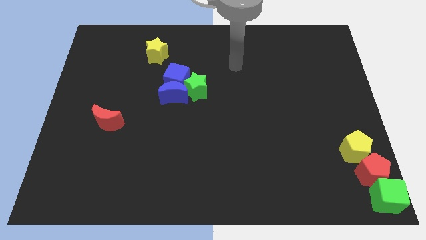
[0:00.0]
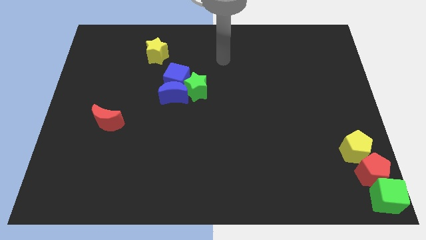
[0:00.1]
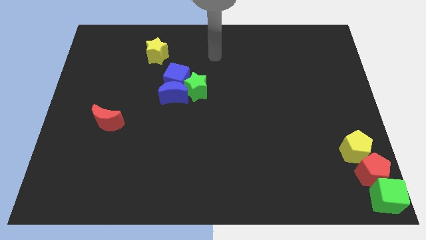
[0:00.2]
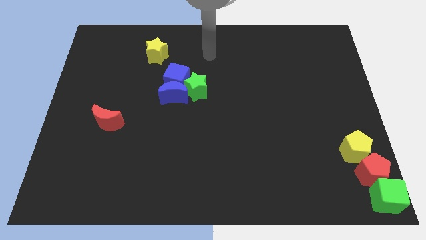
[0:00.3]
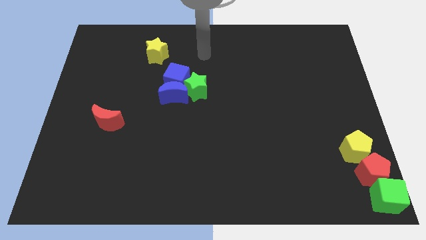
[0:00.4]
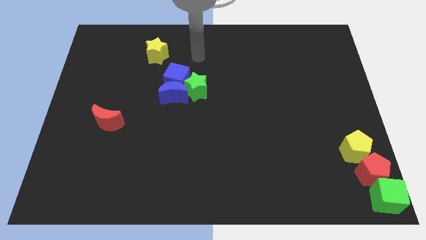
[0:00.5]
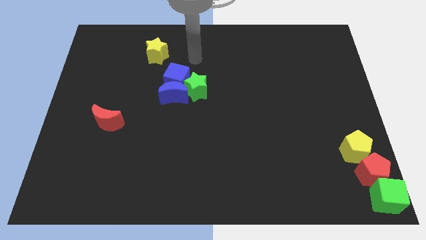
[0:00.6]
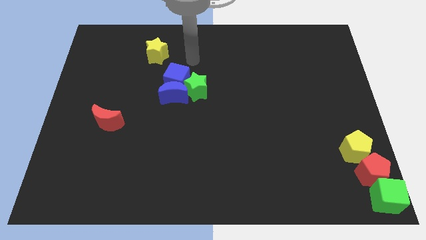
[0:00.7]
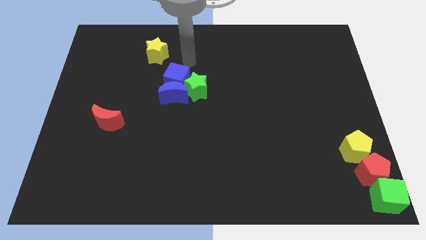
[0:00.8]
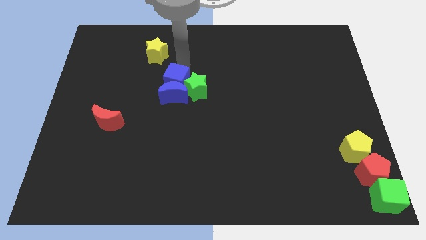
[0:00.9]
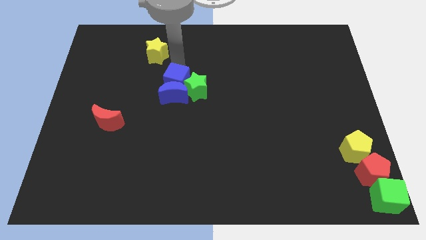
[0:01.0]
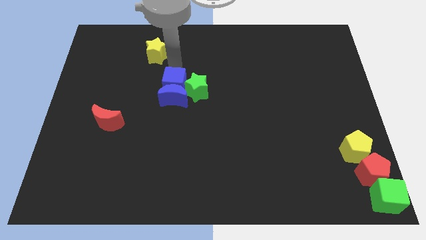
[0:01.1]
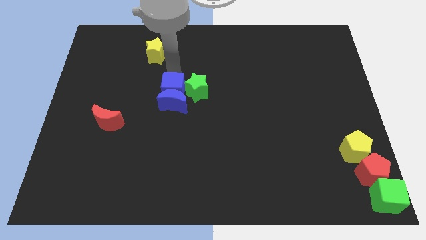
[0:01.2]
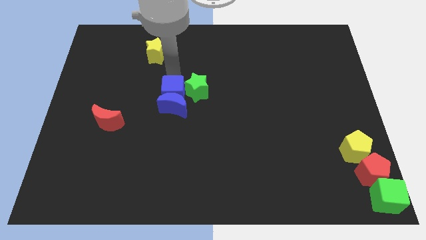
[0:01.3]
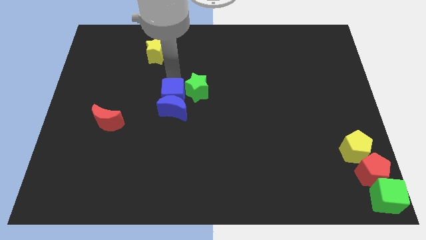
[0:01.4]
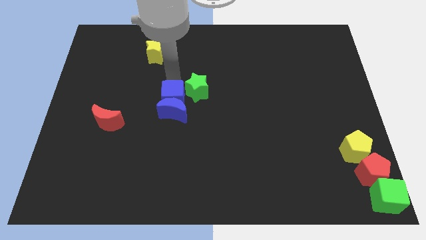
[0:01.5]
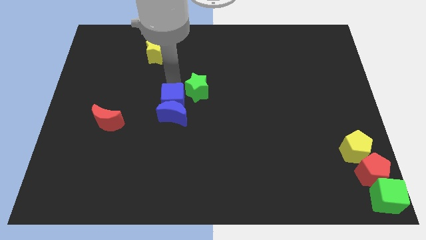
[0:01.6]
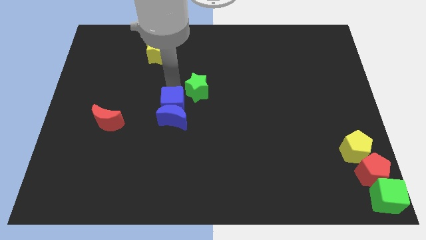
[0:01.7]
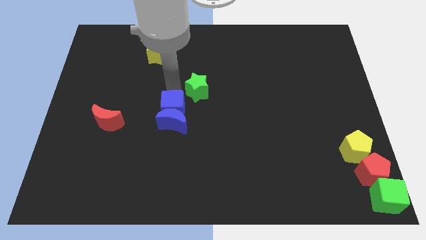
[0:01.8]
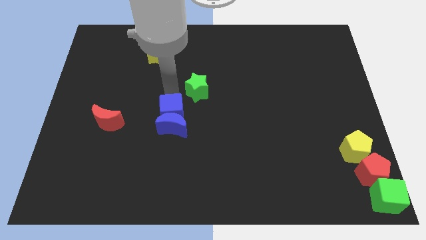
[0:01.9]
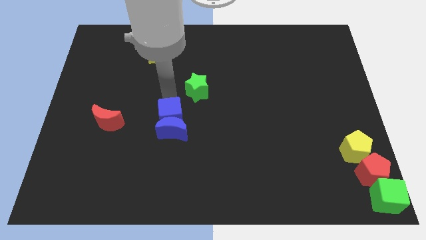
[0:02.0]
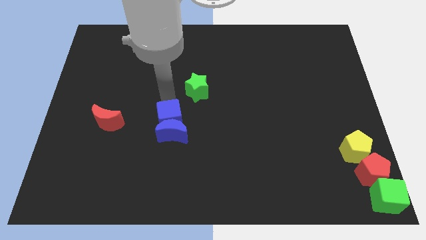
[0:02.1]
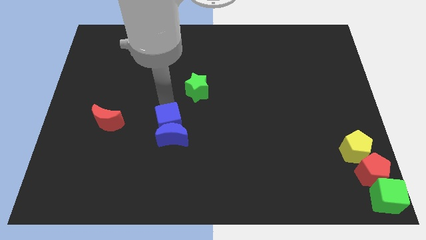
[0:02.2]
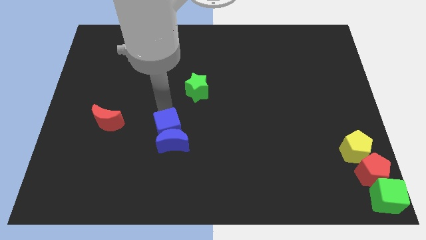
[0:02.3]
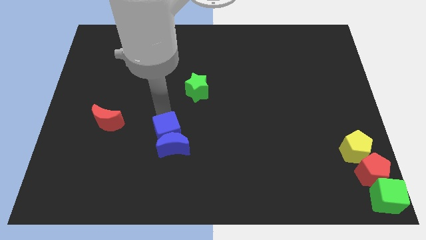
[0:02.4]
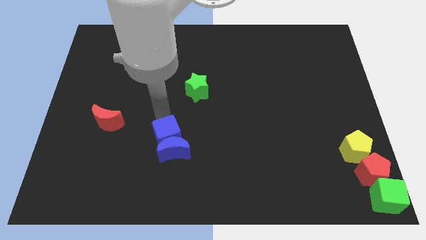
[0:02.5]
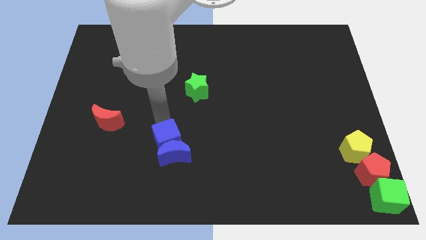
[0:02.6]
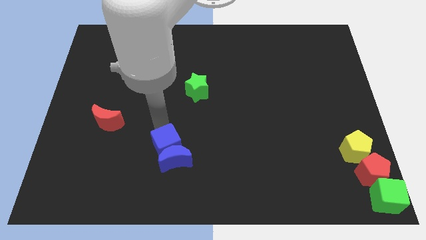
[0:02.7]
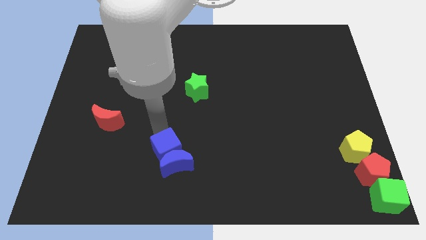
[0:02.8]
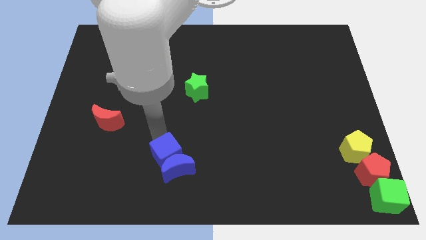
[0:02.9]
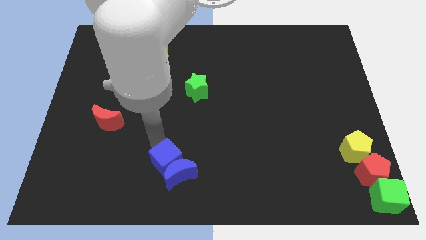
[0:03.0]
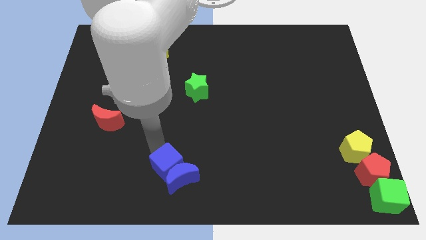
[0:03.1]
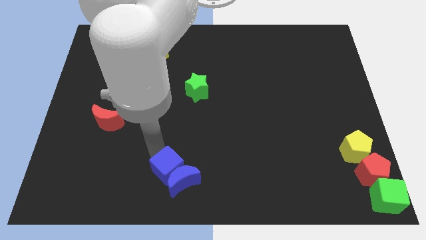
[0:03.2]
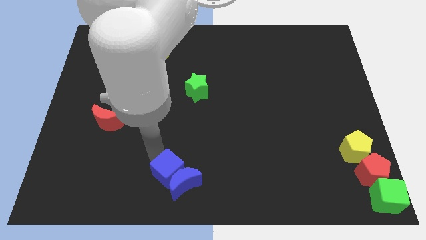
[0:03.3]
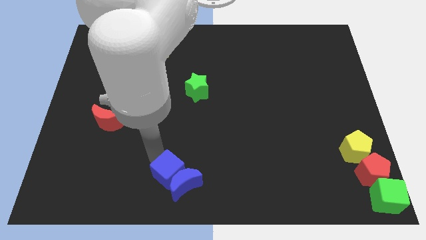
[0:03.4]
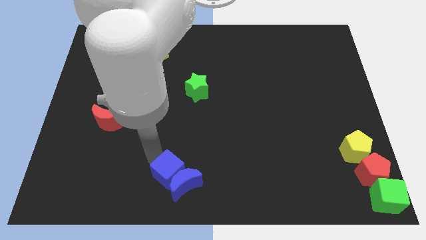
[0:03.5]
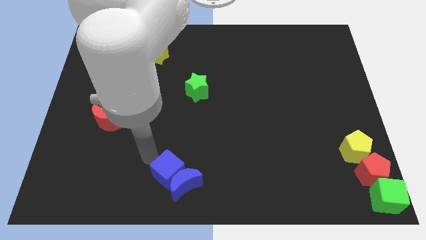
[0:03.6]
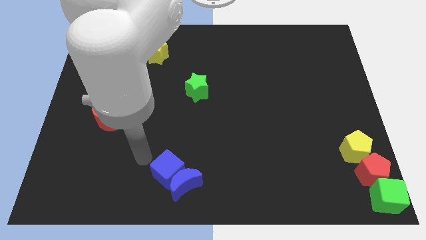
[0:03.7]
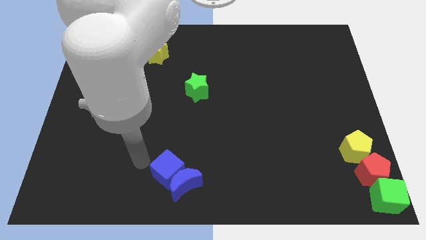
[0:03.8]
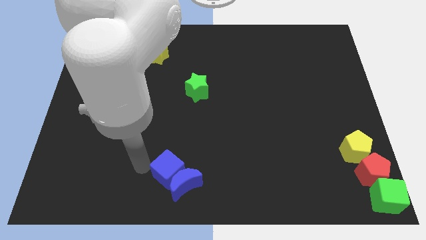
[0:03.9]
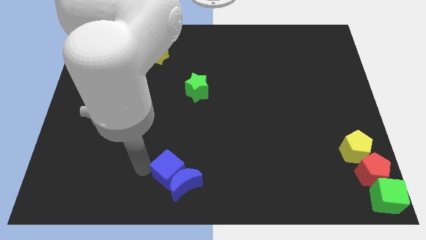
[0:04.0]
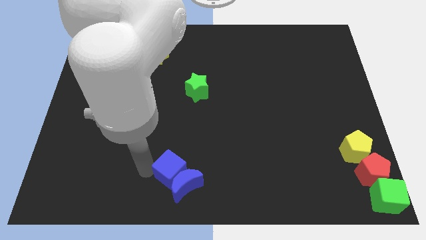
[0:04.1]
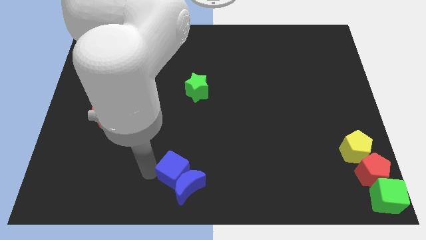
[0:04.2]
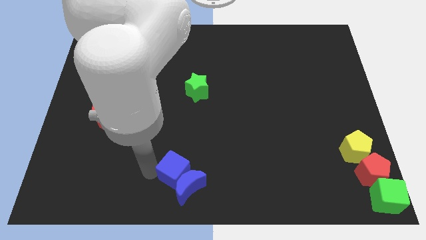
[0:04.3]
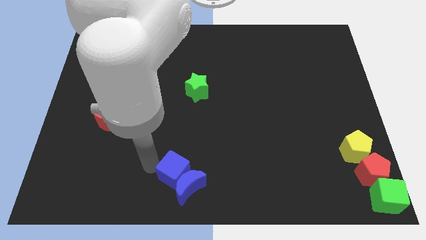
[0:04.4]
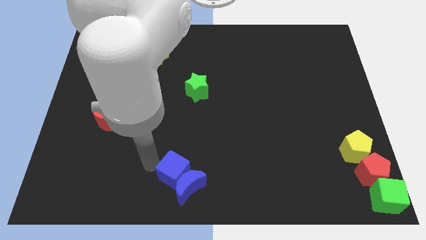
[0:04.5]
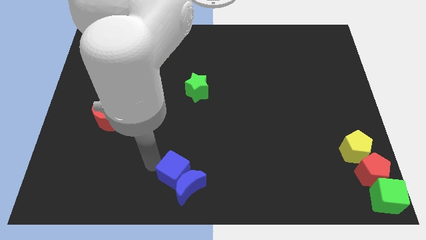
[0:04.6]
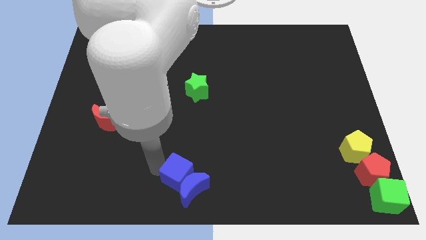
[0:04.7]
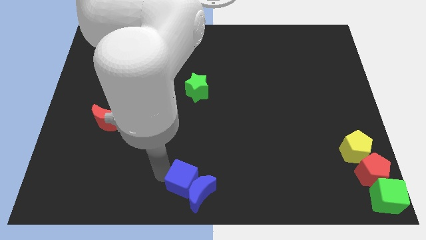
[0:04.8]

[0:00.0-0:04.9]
separate the both blue blocks from the green star

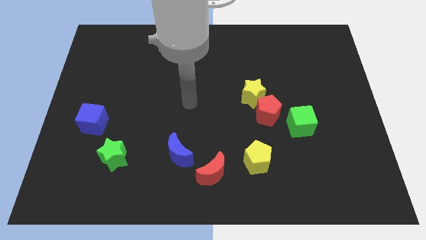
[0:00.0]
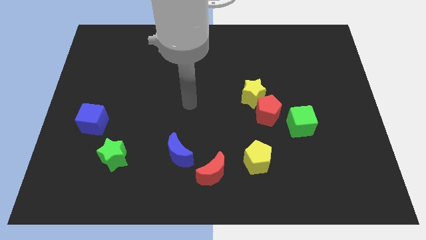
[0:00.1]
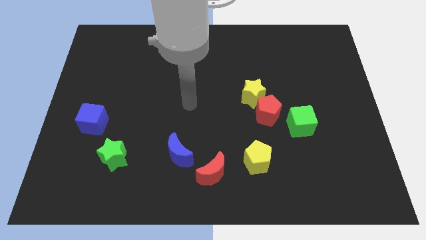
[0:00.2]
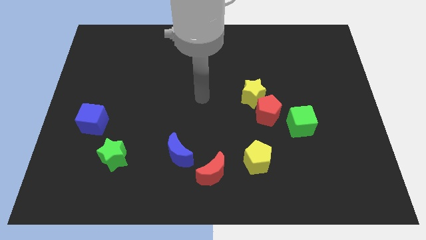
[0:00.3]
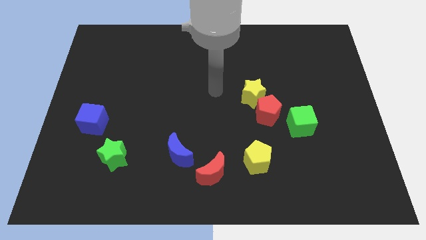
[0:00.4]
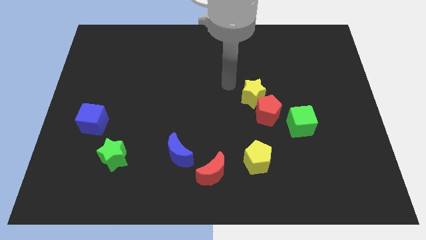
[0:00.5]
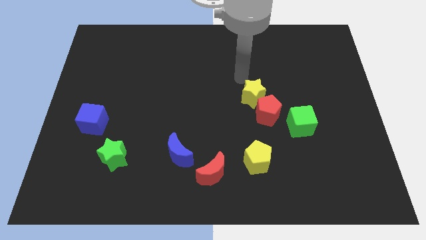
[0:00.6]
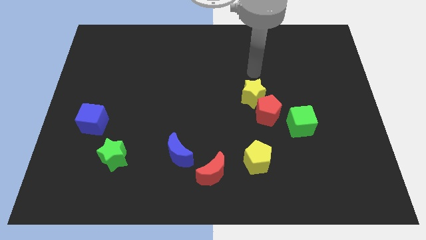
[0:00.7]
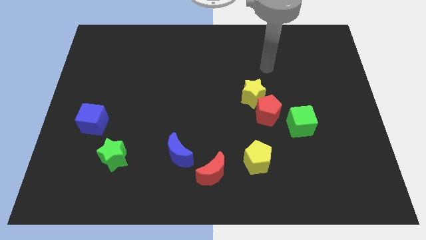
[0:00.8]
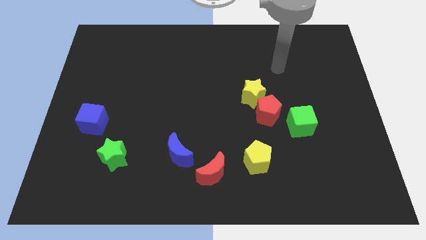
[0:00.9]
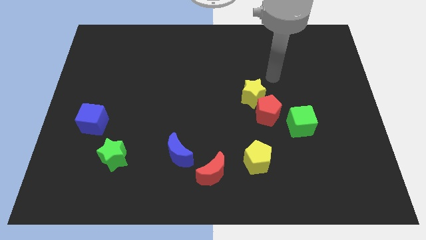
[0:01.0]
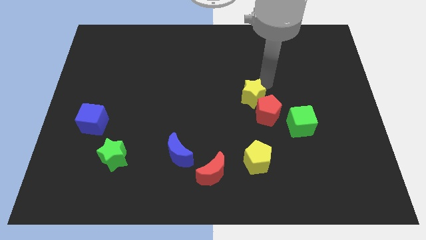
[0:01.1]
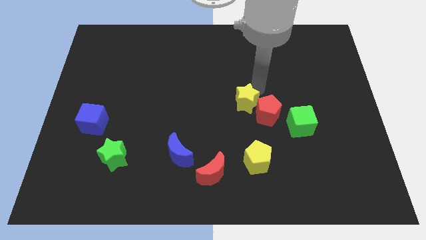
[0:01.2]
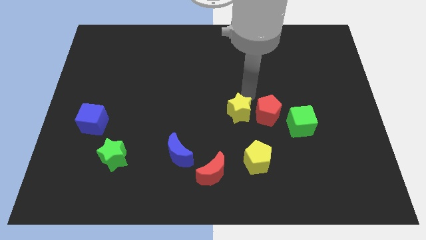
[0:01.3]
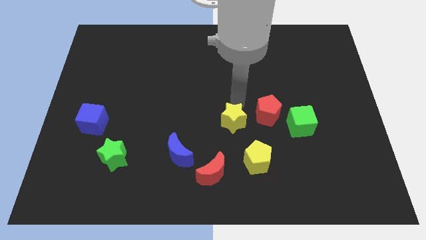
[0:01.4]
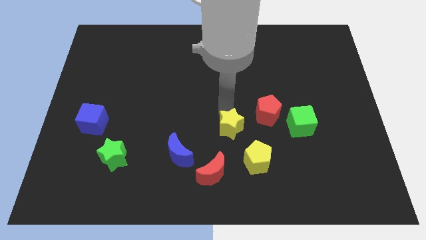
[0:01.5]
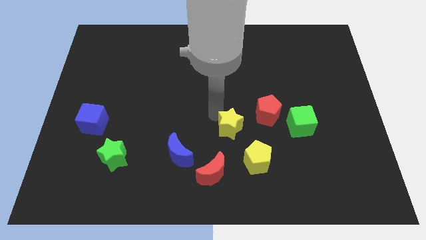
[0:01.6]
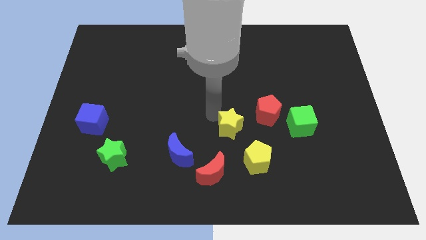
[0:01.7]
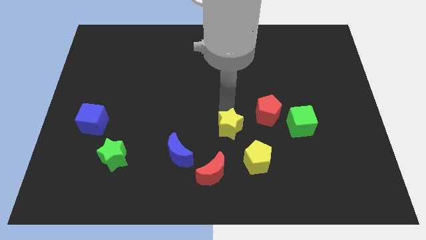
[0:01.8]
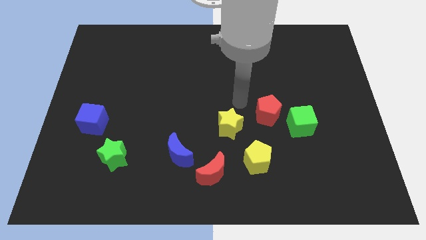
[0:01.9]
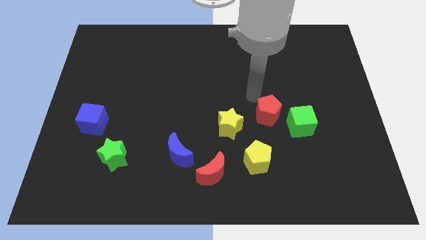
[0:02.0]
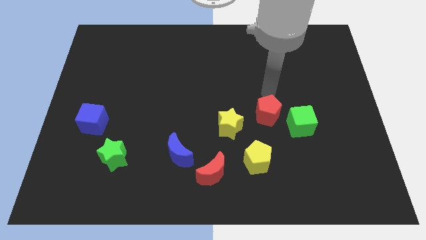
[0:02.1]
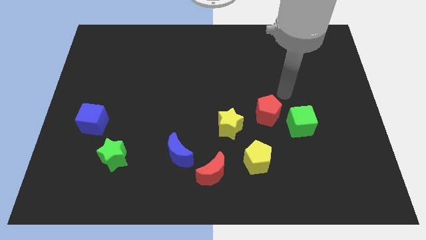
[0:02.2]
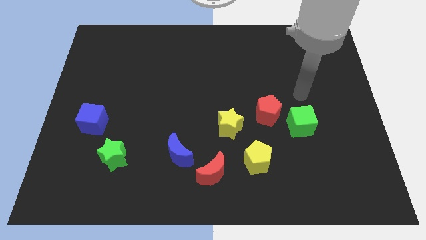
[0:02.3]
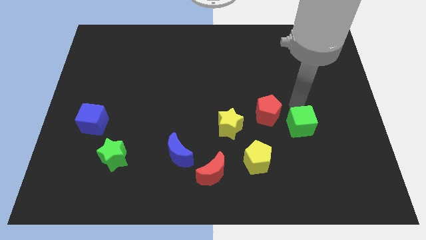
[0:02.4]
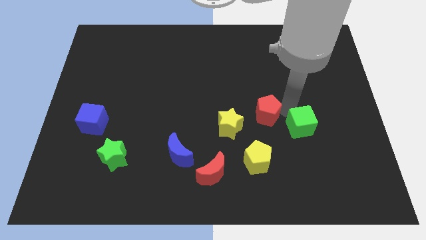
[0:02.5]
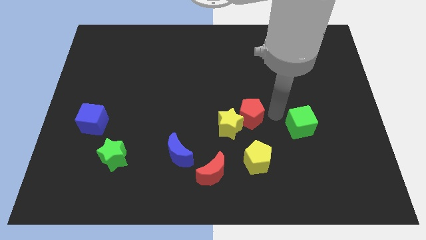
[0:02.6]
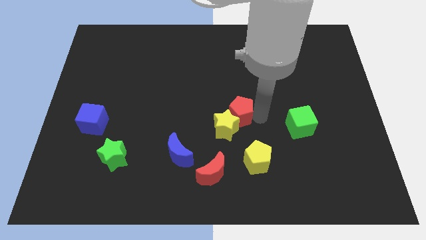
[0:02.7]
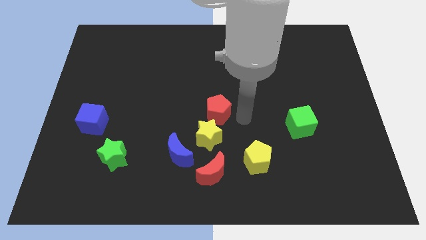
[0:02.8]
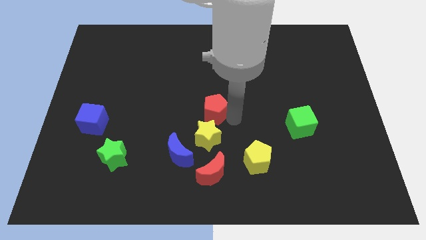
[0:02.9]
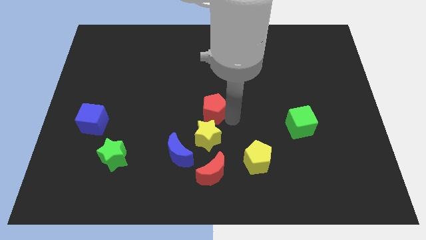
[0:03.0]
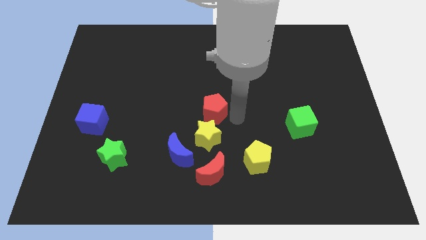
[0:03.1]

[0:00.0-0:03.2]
place the red pentagon and yellow star at the top of red moon

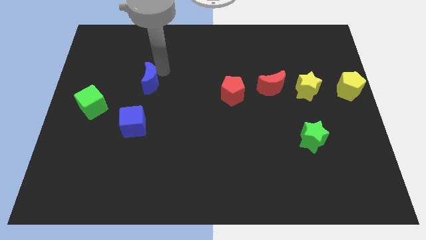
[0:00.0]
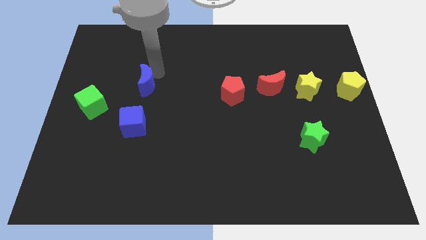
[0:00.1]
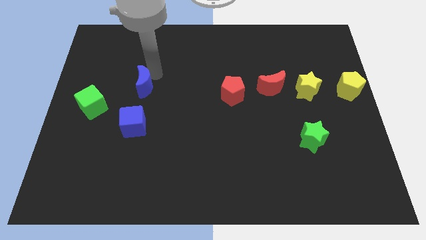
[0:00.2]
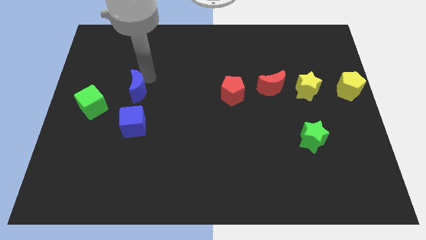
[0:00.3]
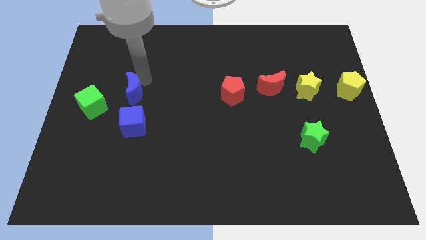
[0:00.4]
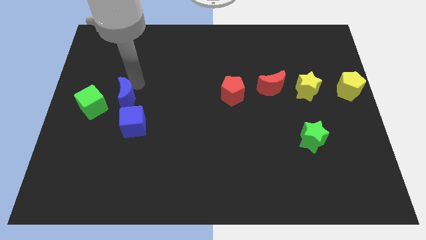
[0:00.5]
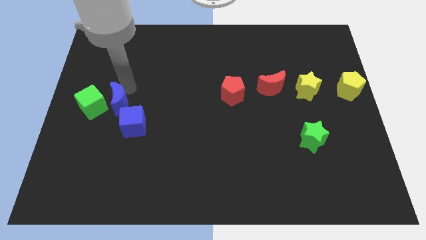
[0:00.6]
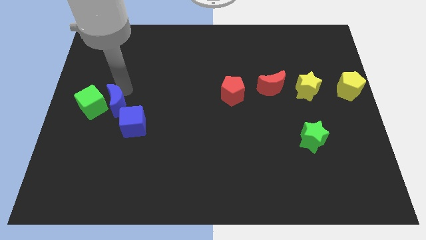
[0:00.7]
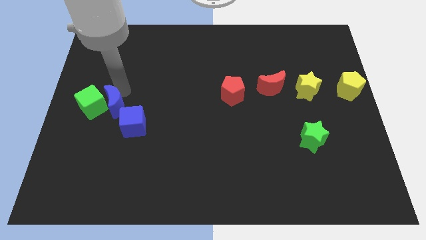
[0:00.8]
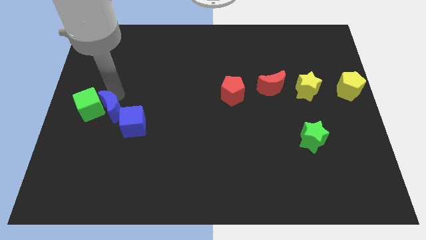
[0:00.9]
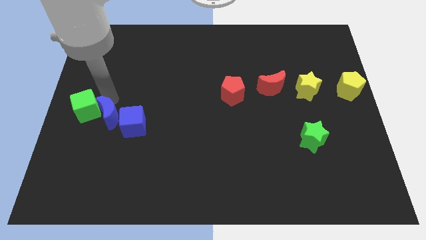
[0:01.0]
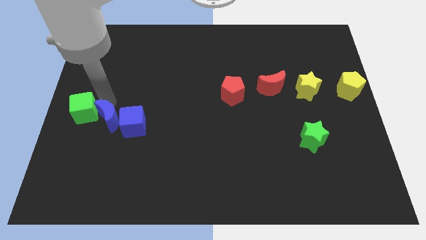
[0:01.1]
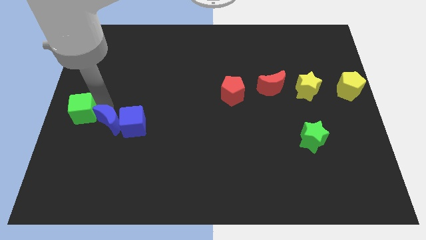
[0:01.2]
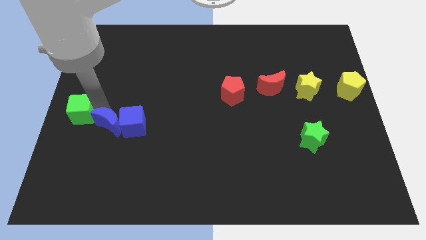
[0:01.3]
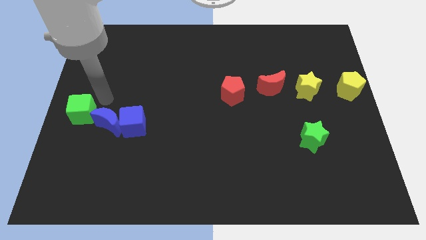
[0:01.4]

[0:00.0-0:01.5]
move the blue crescent towards the left of the blue cube
